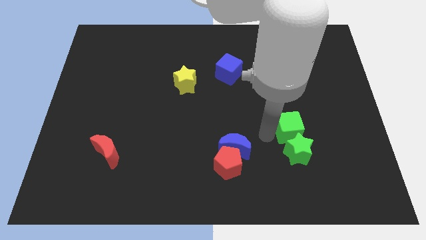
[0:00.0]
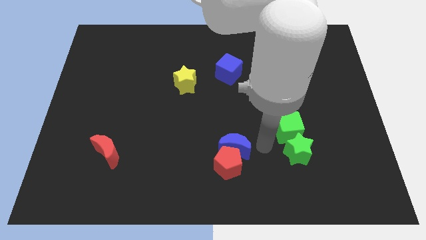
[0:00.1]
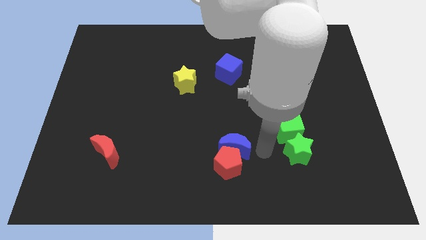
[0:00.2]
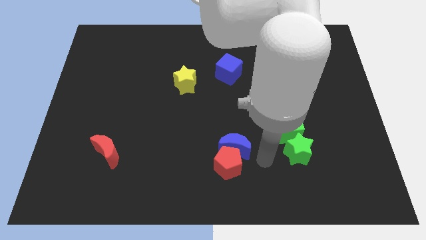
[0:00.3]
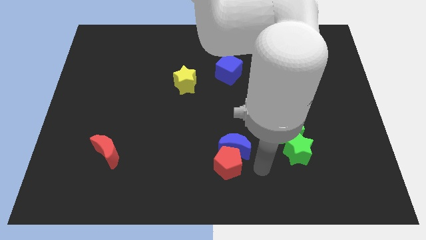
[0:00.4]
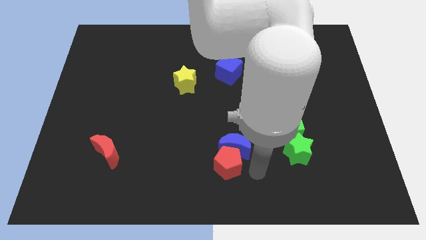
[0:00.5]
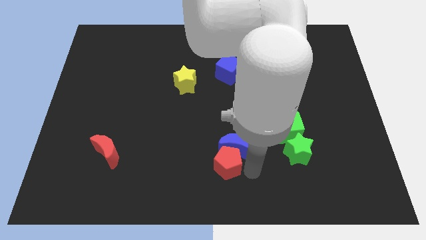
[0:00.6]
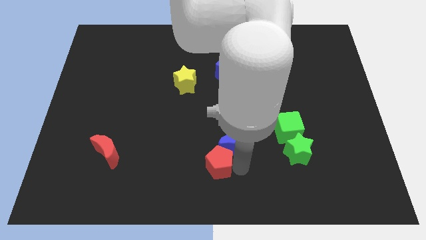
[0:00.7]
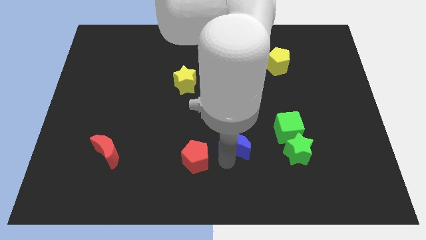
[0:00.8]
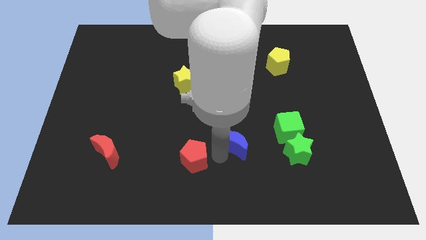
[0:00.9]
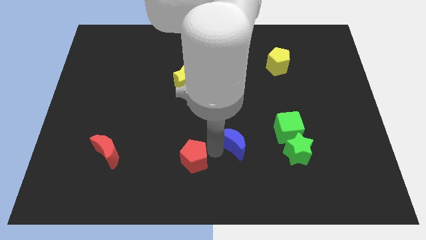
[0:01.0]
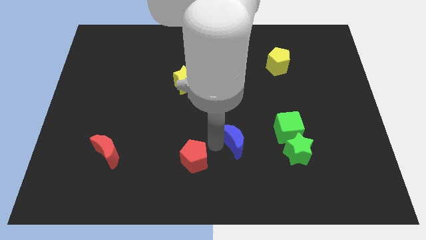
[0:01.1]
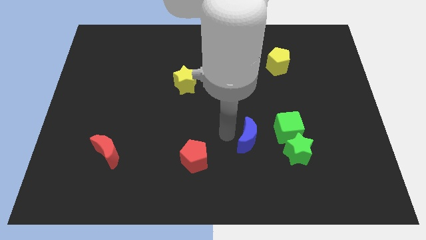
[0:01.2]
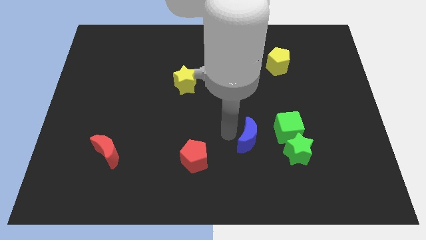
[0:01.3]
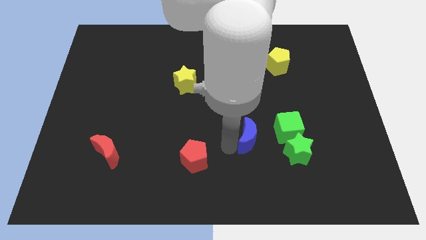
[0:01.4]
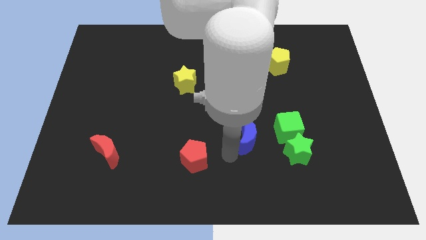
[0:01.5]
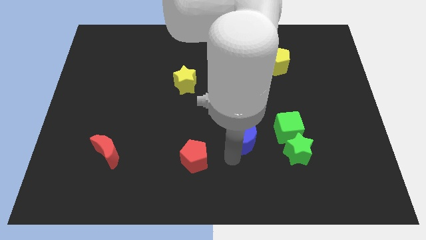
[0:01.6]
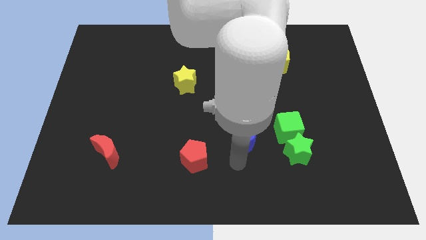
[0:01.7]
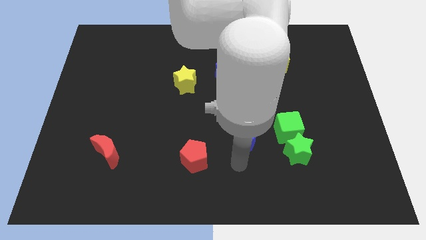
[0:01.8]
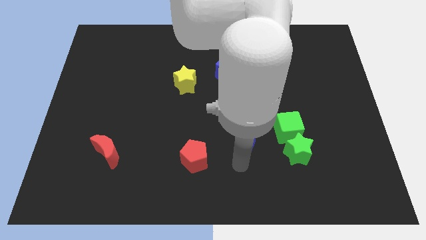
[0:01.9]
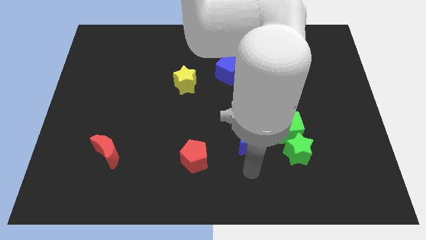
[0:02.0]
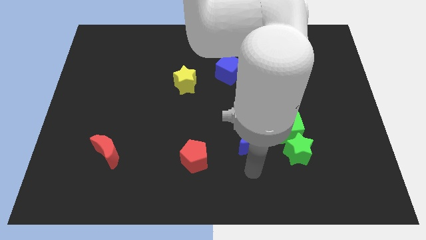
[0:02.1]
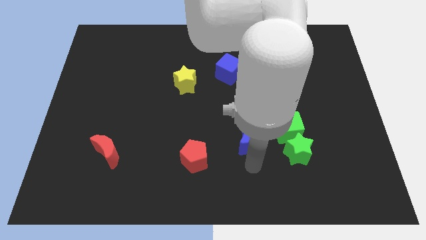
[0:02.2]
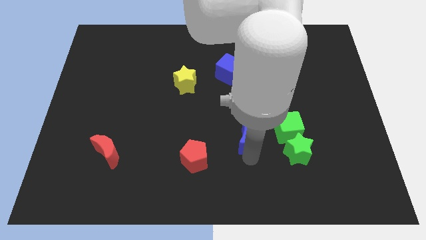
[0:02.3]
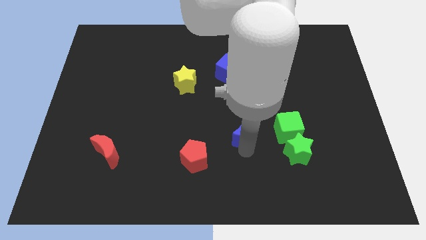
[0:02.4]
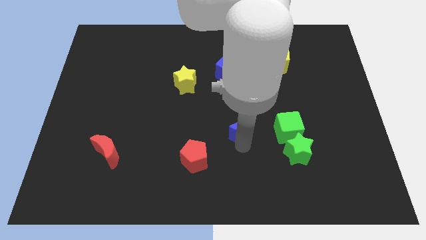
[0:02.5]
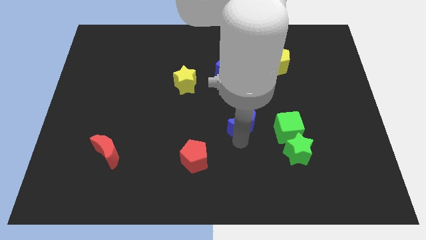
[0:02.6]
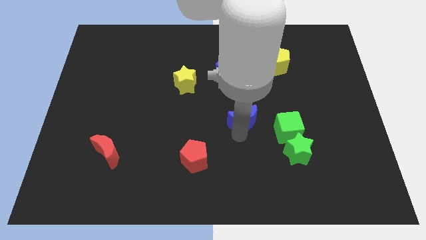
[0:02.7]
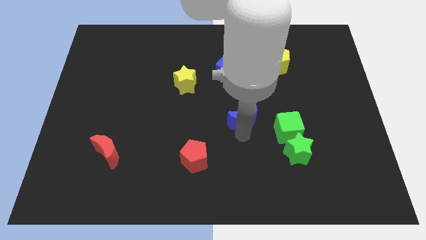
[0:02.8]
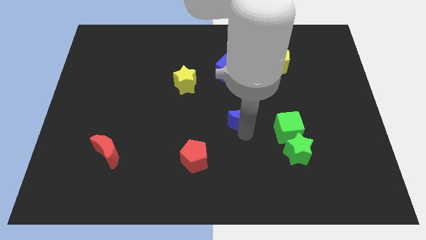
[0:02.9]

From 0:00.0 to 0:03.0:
move the blue moon away from the red pentagon

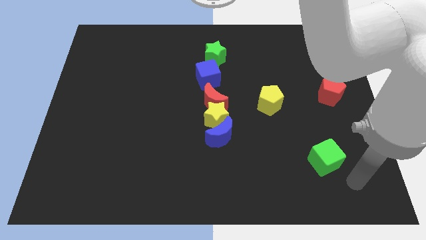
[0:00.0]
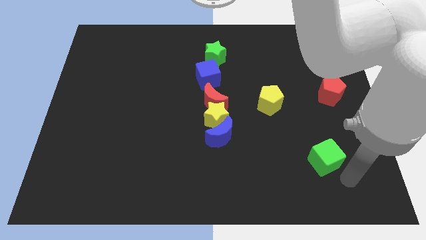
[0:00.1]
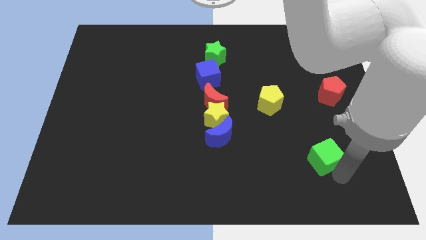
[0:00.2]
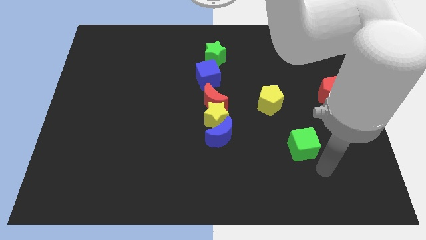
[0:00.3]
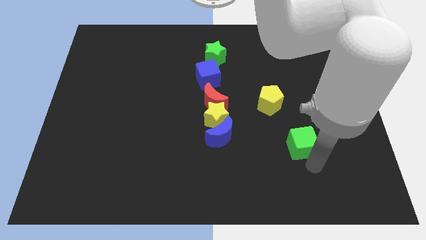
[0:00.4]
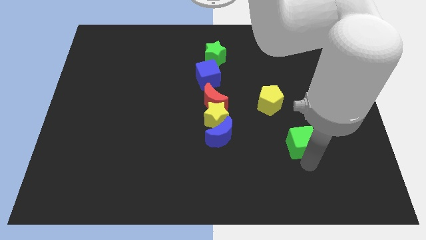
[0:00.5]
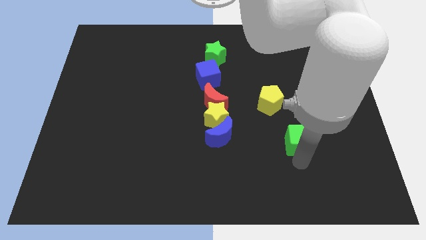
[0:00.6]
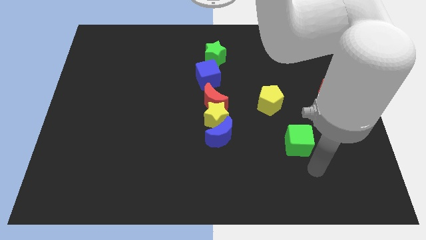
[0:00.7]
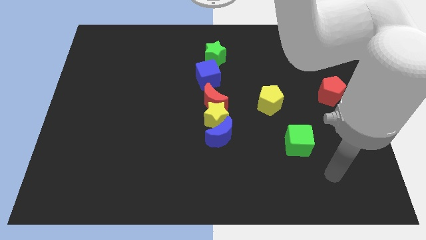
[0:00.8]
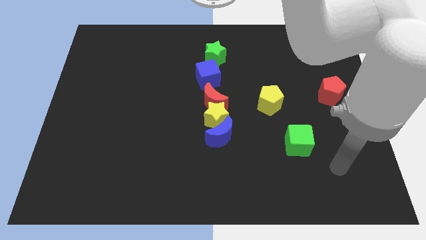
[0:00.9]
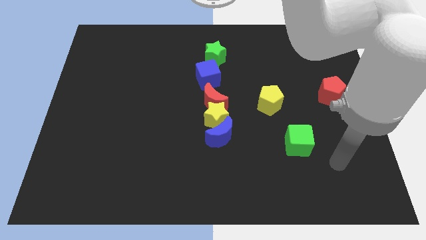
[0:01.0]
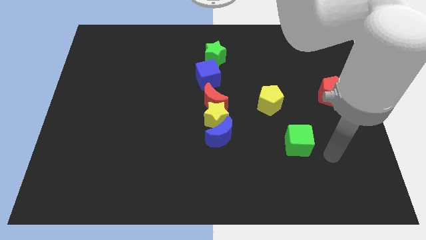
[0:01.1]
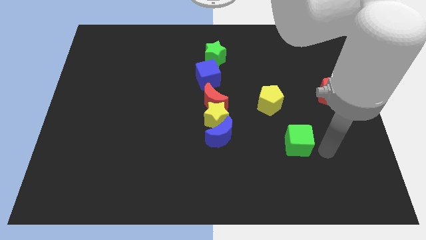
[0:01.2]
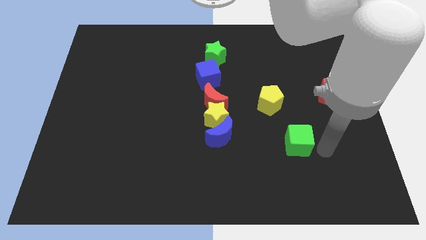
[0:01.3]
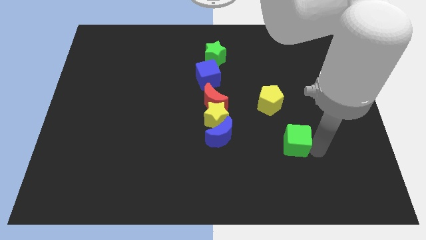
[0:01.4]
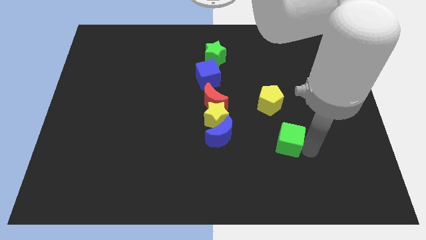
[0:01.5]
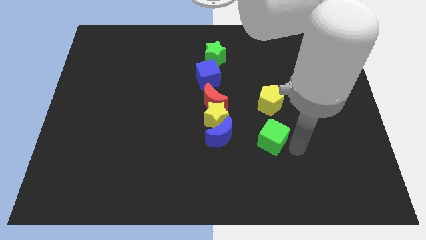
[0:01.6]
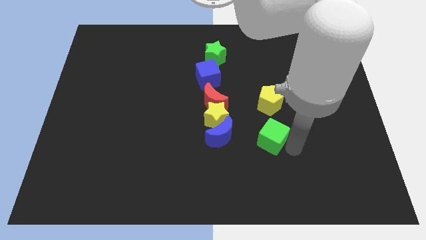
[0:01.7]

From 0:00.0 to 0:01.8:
move the green cube below the yellow pentagon

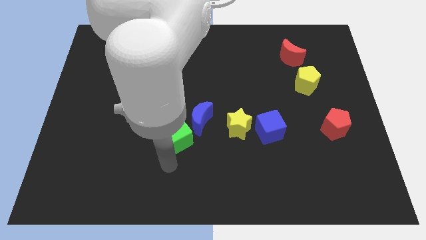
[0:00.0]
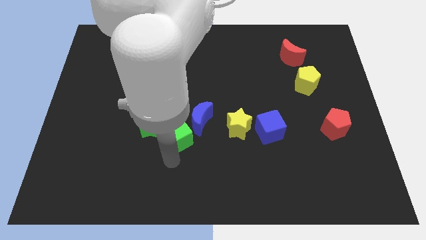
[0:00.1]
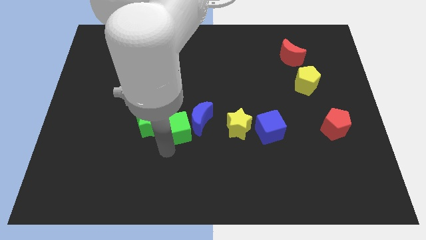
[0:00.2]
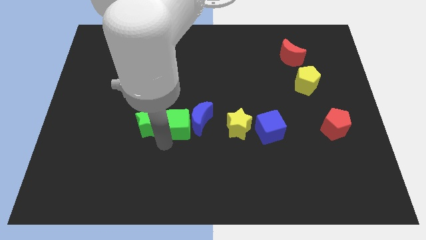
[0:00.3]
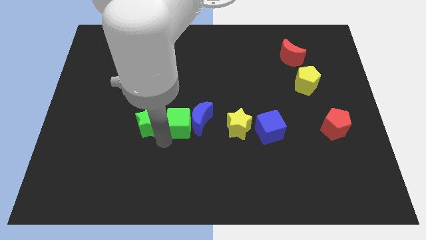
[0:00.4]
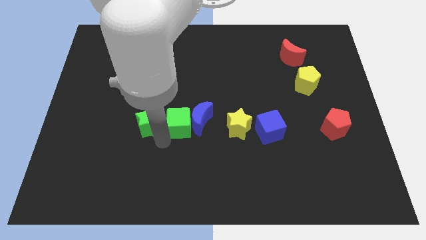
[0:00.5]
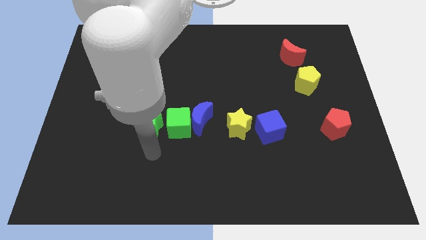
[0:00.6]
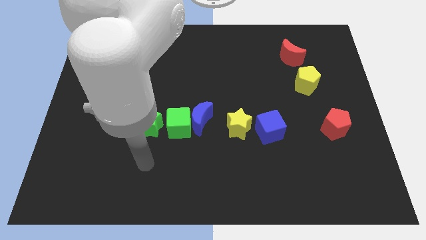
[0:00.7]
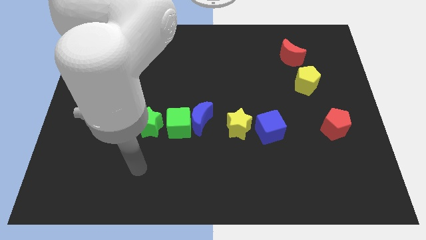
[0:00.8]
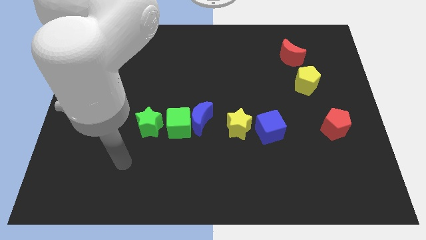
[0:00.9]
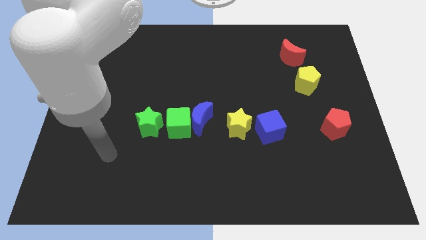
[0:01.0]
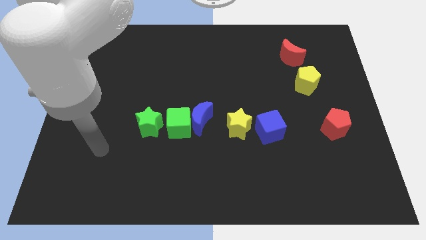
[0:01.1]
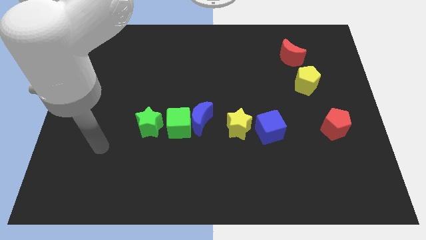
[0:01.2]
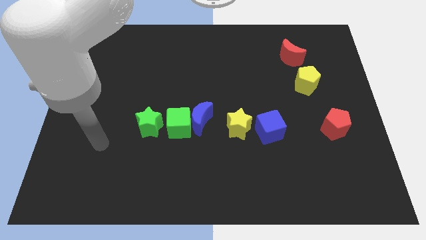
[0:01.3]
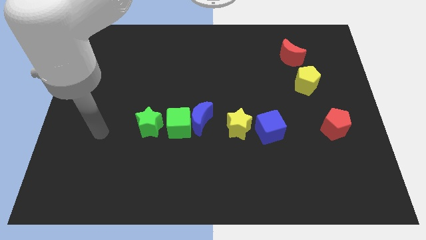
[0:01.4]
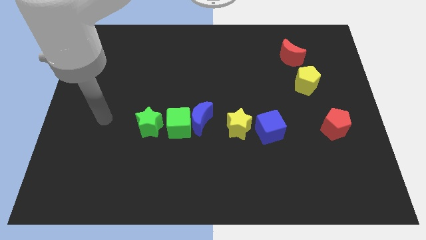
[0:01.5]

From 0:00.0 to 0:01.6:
place green cube in between green star and blue crescent

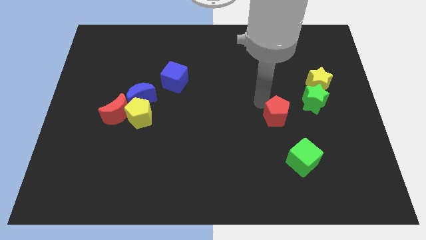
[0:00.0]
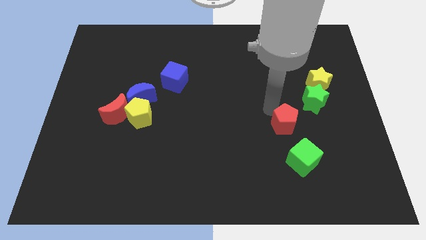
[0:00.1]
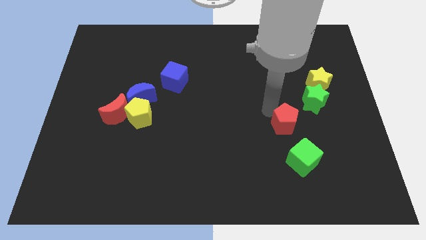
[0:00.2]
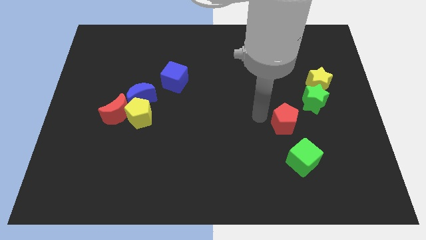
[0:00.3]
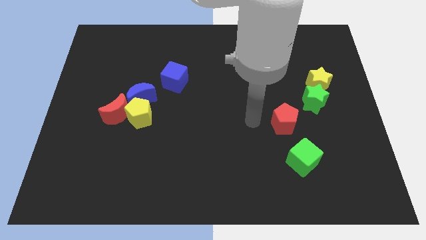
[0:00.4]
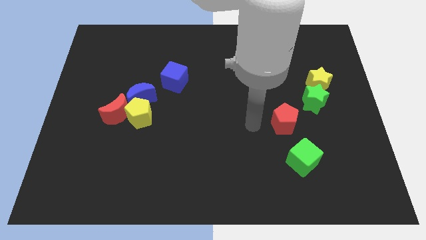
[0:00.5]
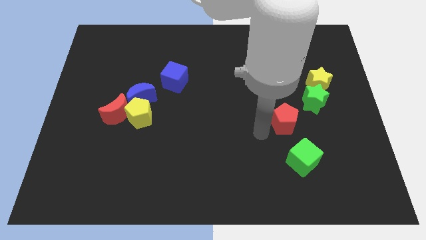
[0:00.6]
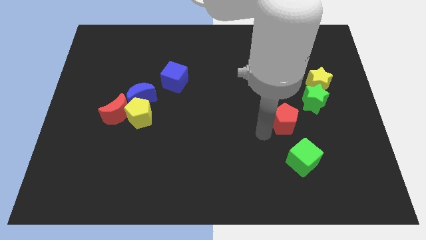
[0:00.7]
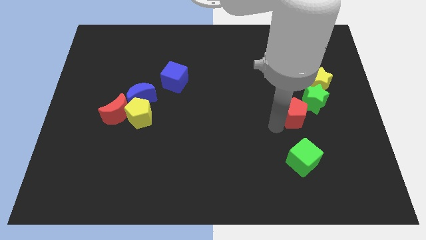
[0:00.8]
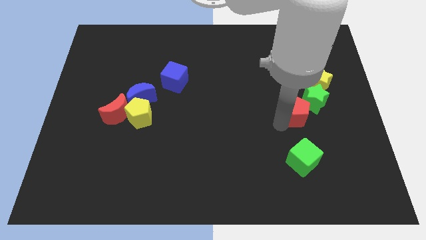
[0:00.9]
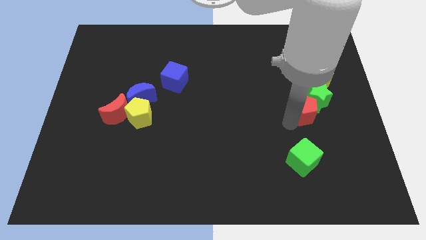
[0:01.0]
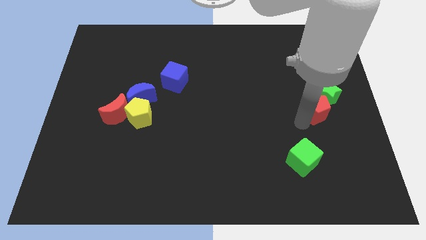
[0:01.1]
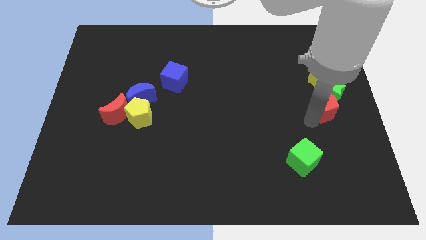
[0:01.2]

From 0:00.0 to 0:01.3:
push red pentagon towards green star

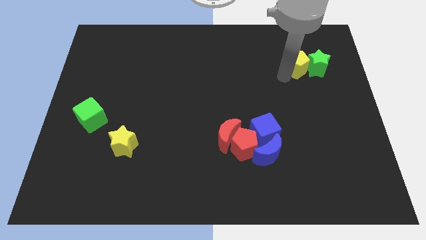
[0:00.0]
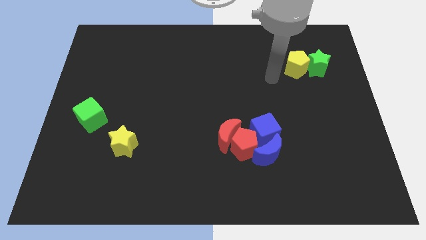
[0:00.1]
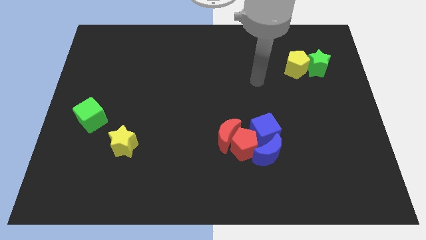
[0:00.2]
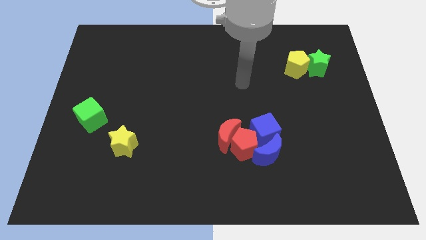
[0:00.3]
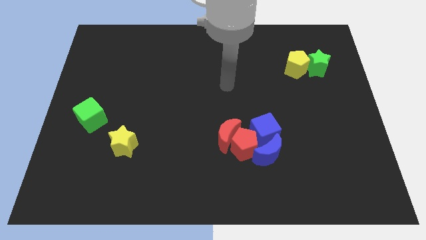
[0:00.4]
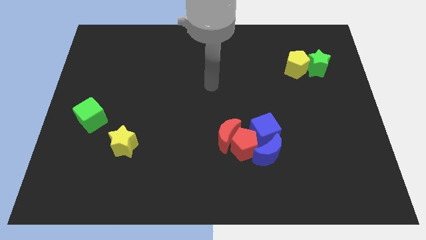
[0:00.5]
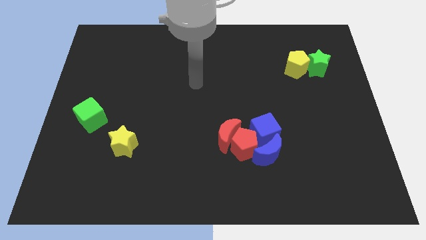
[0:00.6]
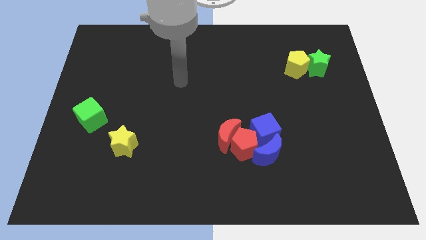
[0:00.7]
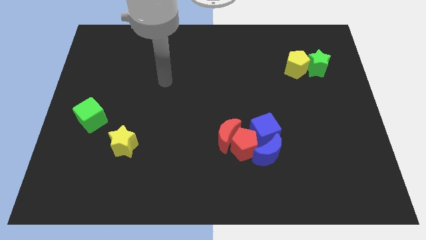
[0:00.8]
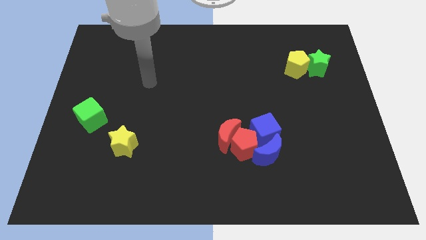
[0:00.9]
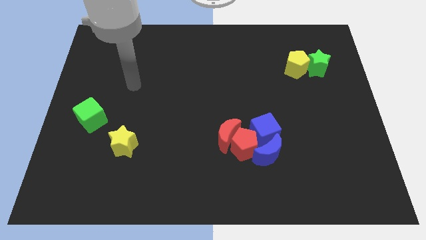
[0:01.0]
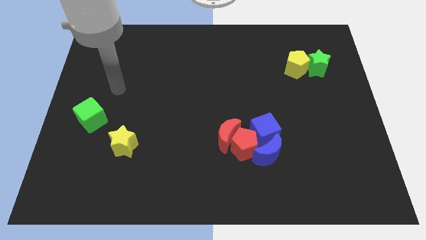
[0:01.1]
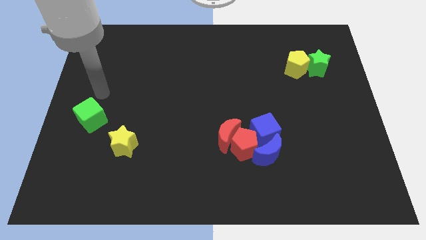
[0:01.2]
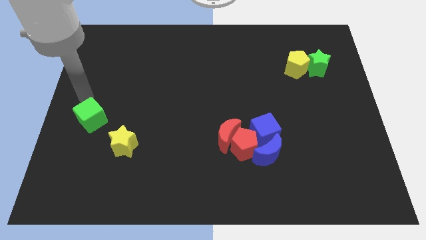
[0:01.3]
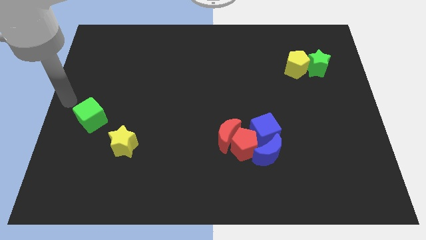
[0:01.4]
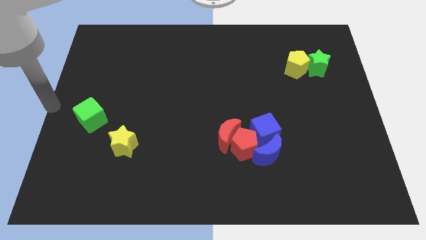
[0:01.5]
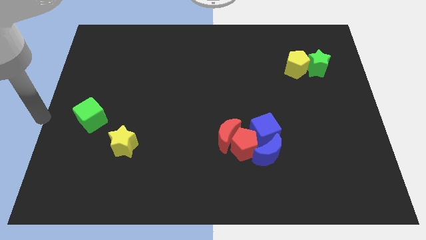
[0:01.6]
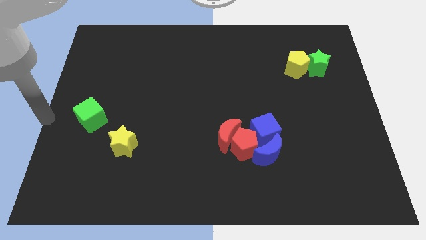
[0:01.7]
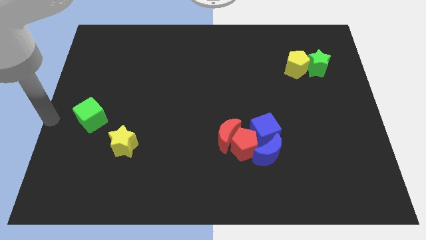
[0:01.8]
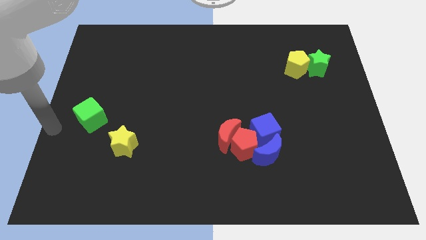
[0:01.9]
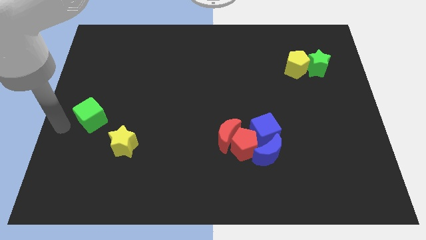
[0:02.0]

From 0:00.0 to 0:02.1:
point your arm to the left of the green cube
